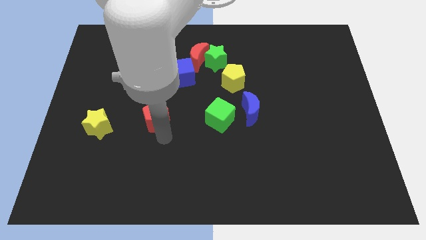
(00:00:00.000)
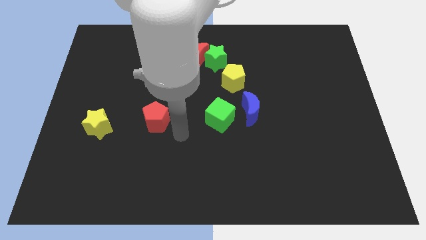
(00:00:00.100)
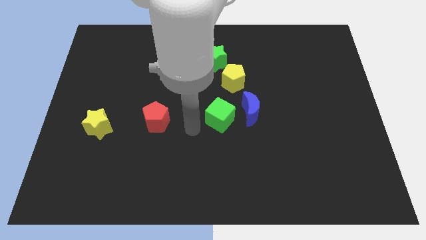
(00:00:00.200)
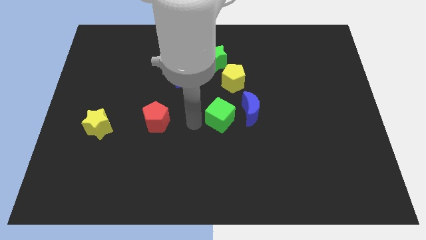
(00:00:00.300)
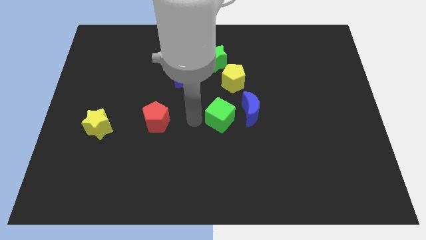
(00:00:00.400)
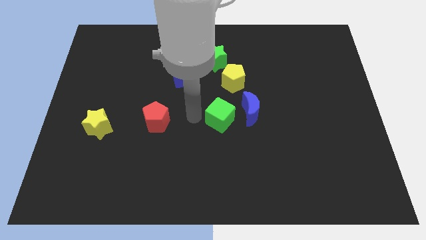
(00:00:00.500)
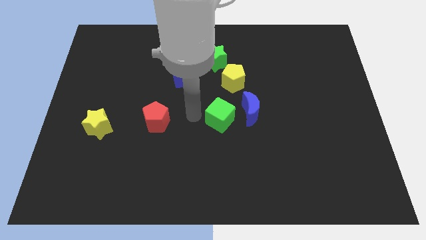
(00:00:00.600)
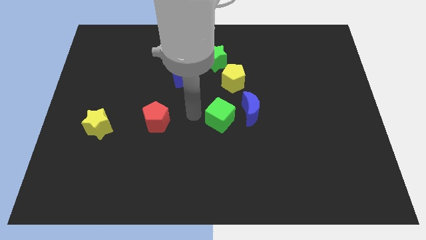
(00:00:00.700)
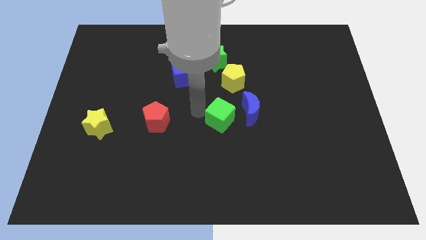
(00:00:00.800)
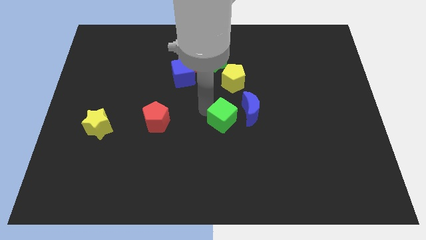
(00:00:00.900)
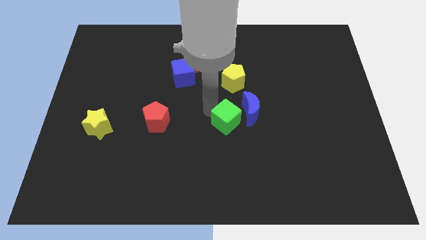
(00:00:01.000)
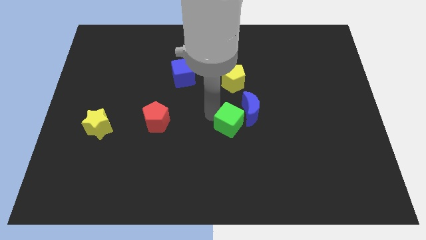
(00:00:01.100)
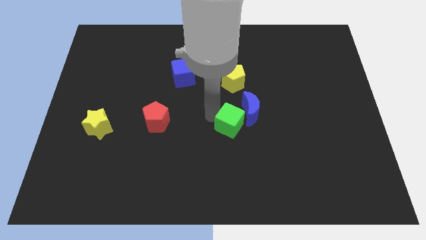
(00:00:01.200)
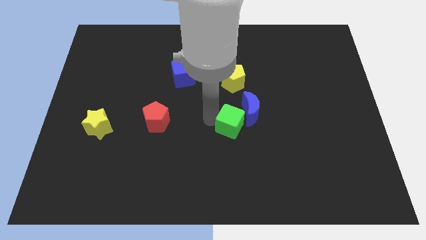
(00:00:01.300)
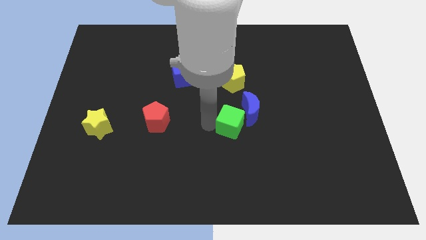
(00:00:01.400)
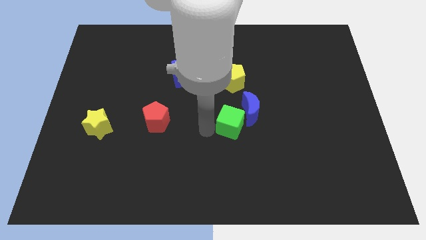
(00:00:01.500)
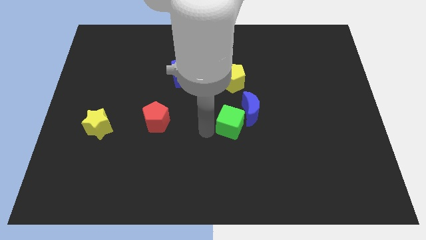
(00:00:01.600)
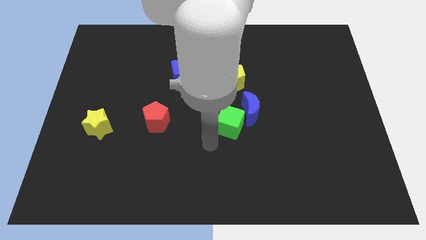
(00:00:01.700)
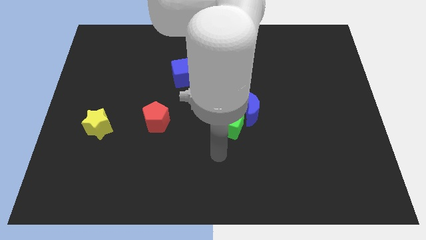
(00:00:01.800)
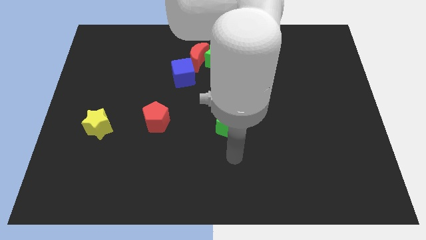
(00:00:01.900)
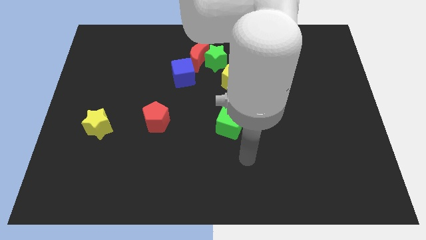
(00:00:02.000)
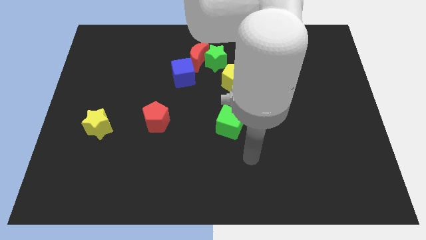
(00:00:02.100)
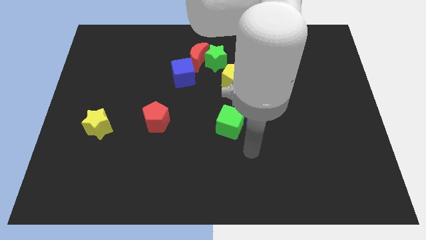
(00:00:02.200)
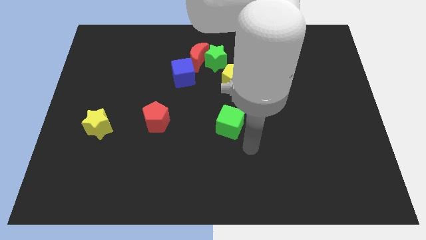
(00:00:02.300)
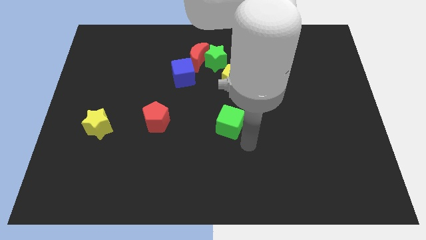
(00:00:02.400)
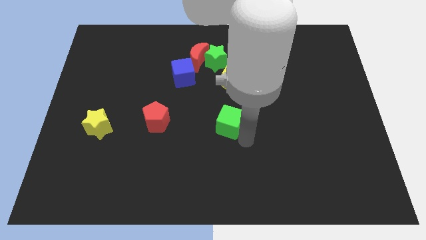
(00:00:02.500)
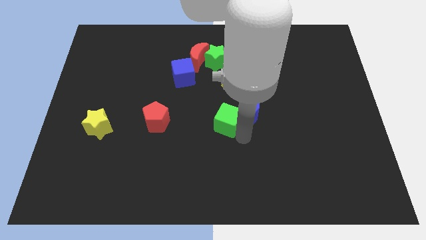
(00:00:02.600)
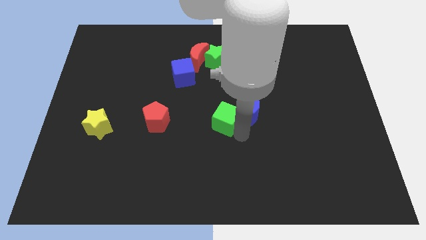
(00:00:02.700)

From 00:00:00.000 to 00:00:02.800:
move green cube into blue crescent

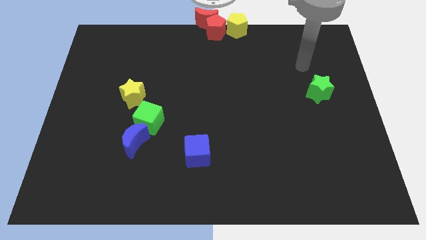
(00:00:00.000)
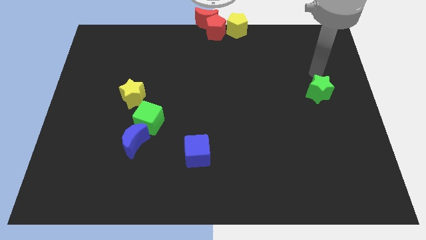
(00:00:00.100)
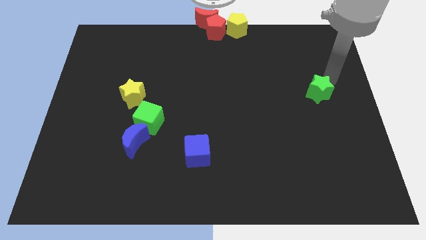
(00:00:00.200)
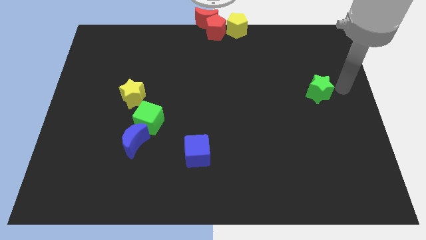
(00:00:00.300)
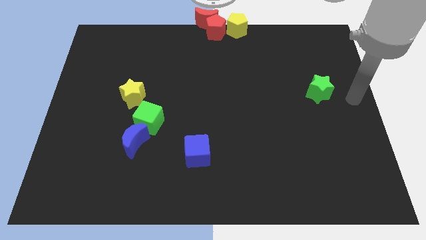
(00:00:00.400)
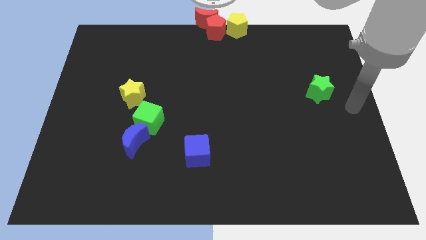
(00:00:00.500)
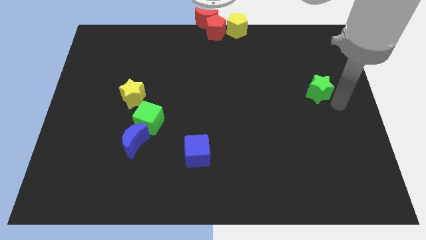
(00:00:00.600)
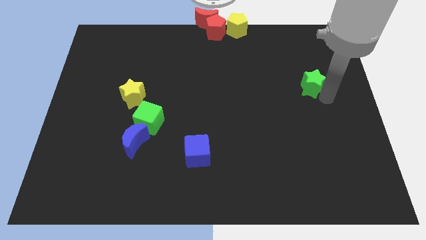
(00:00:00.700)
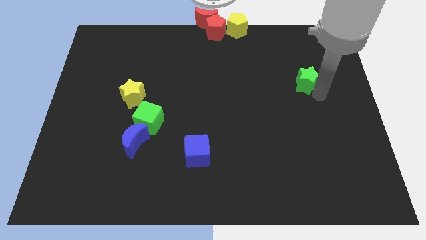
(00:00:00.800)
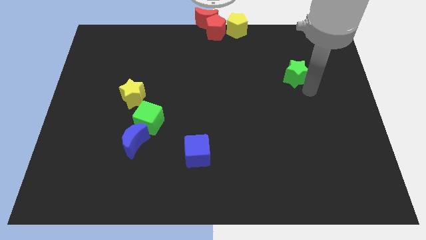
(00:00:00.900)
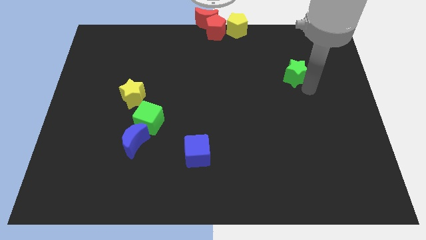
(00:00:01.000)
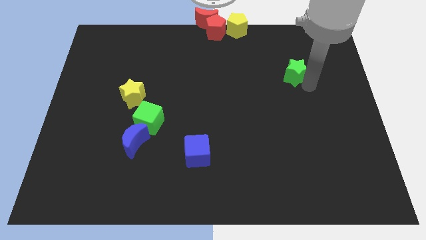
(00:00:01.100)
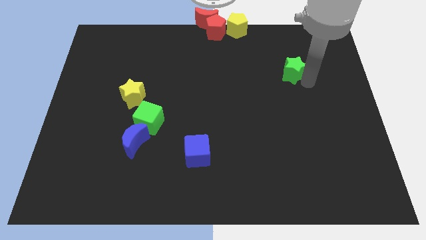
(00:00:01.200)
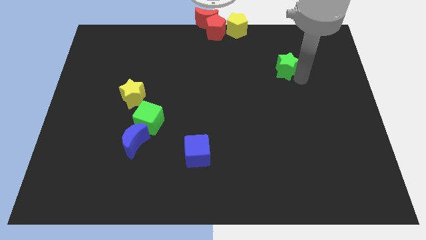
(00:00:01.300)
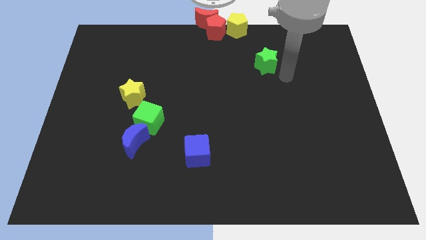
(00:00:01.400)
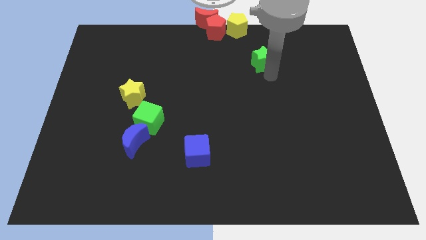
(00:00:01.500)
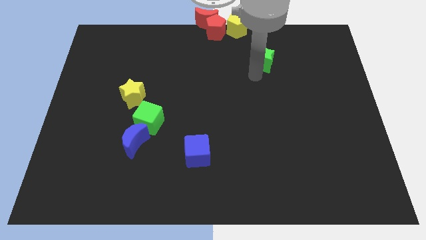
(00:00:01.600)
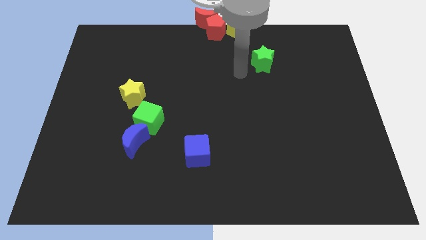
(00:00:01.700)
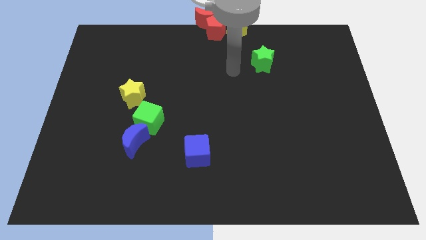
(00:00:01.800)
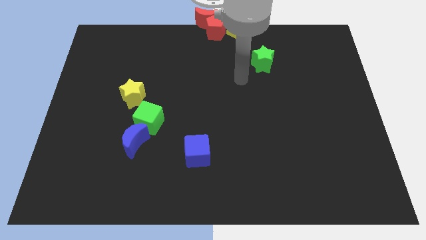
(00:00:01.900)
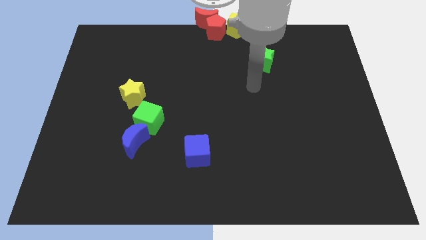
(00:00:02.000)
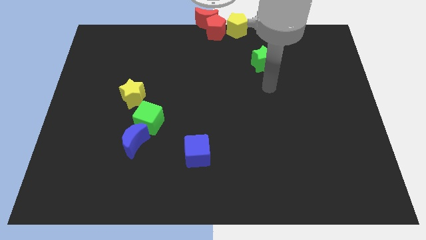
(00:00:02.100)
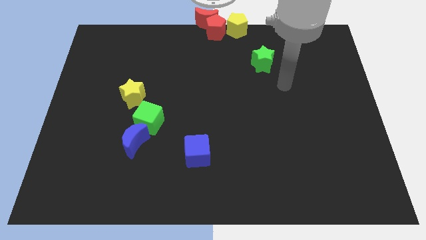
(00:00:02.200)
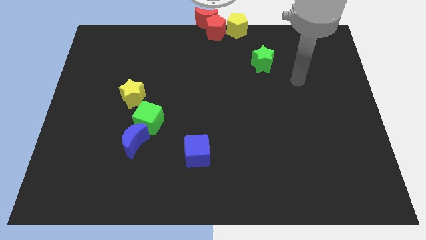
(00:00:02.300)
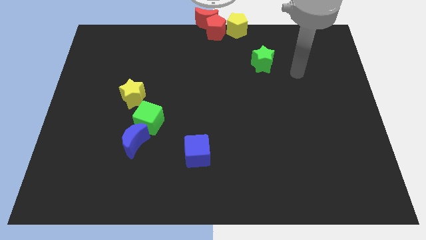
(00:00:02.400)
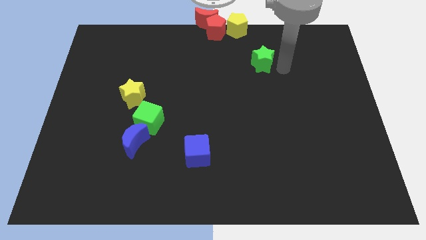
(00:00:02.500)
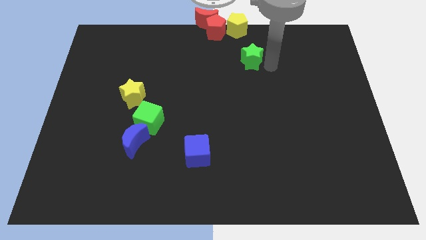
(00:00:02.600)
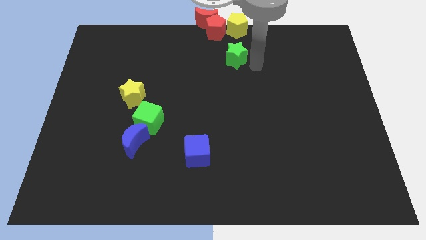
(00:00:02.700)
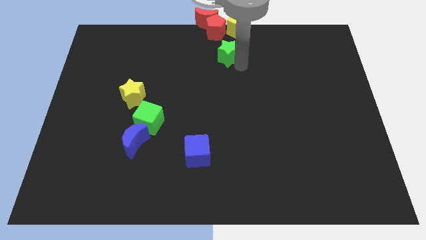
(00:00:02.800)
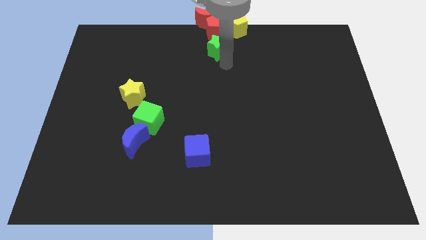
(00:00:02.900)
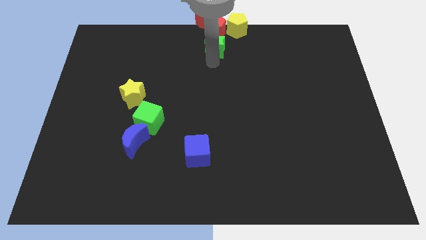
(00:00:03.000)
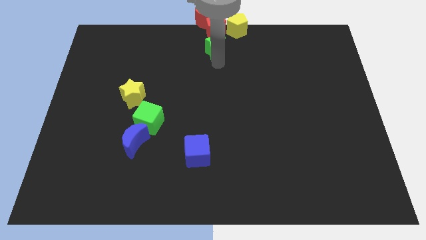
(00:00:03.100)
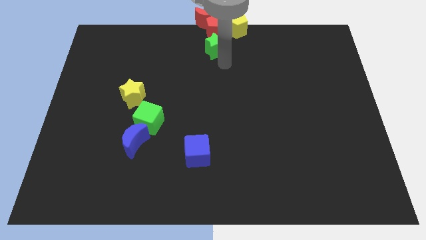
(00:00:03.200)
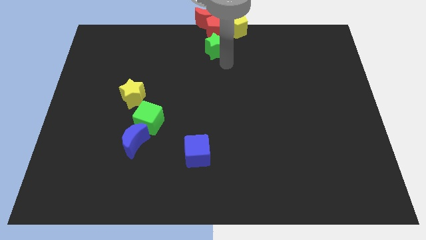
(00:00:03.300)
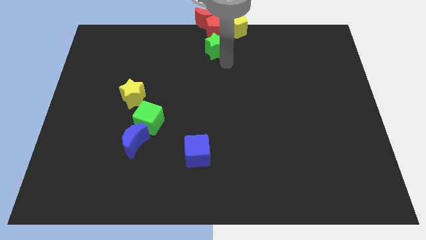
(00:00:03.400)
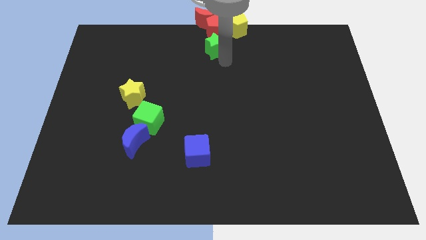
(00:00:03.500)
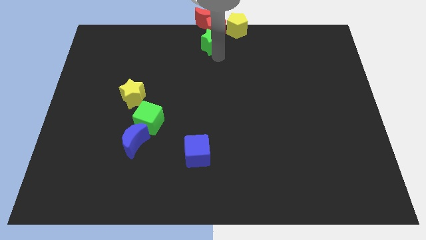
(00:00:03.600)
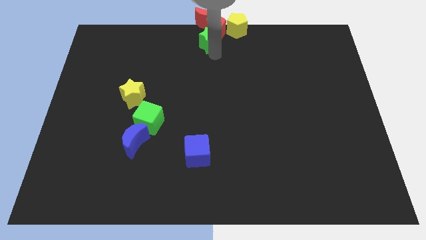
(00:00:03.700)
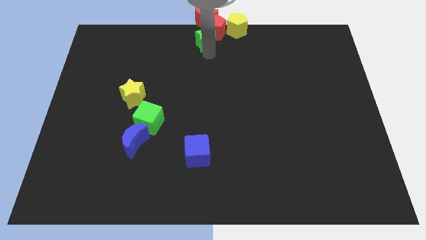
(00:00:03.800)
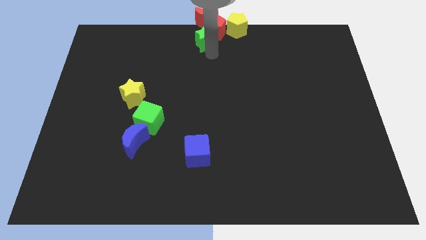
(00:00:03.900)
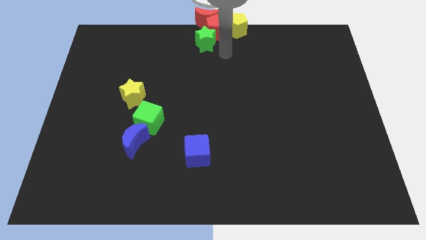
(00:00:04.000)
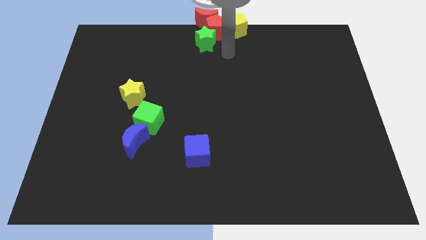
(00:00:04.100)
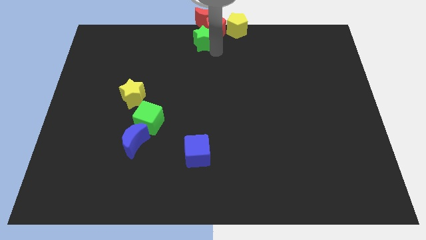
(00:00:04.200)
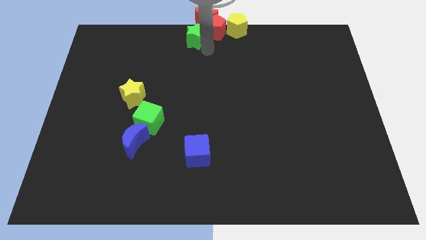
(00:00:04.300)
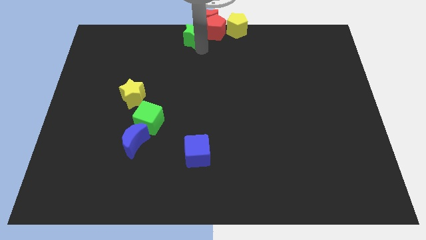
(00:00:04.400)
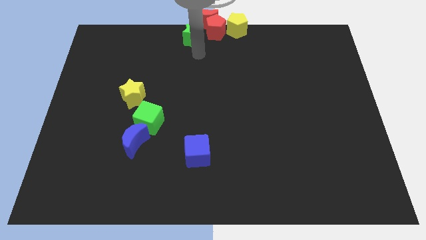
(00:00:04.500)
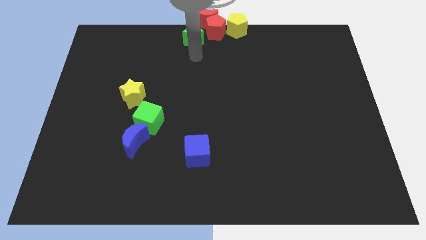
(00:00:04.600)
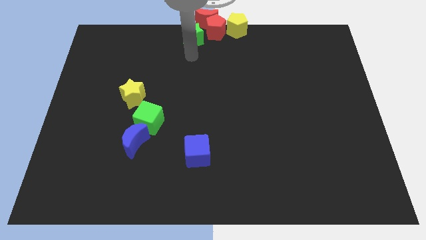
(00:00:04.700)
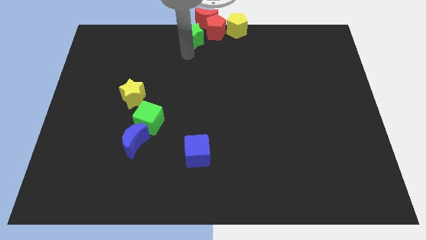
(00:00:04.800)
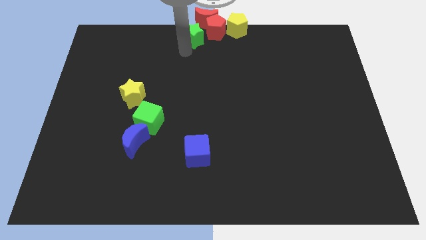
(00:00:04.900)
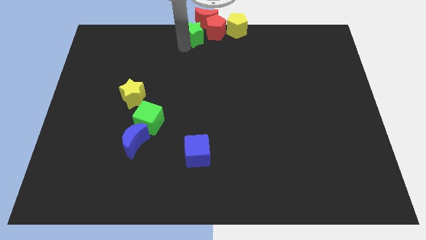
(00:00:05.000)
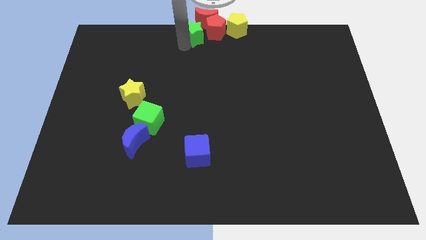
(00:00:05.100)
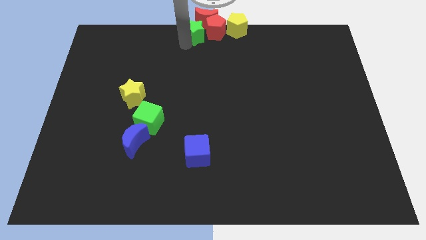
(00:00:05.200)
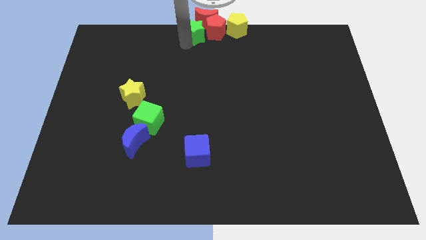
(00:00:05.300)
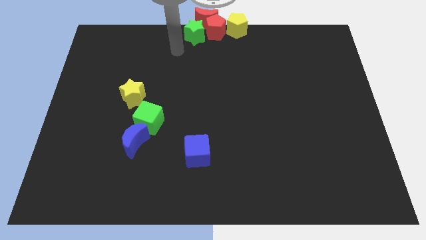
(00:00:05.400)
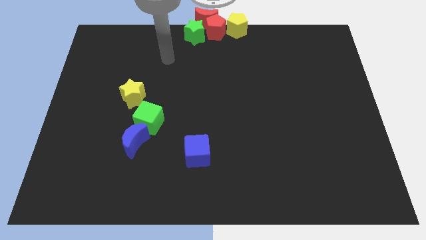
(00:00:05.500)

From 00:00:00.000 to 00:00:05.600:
move the green star to the left side of the red pentagon

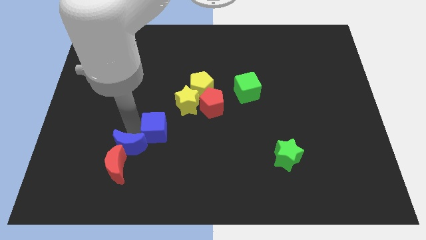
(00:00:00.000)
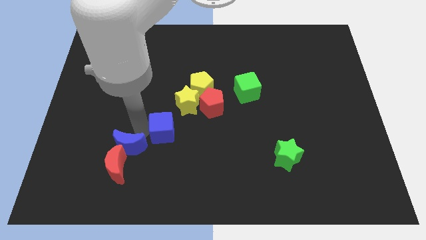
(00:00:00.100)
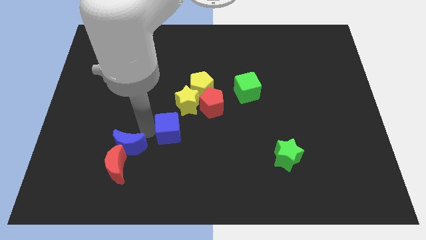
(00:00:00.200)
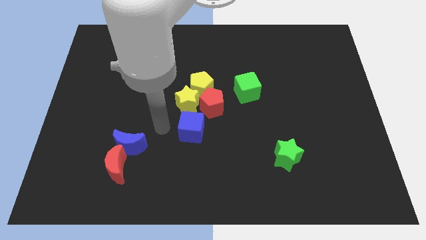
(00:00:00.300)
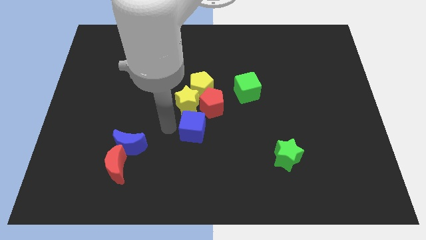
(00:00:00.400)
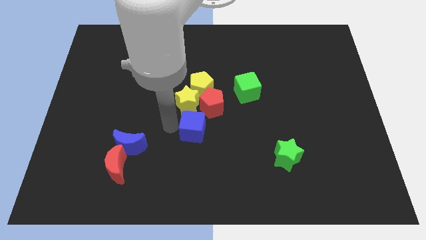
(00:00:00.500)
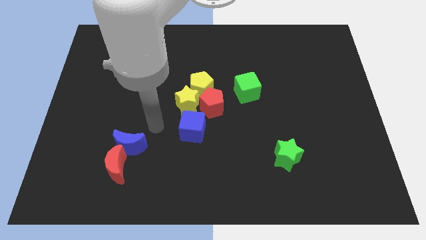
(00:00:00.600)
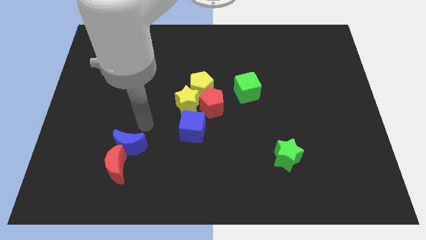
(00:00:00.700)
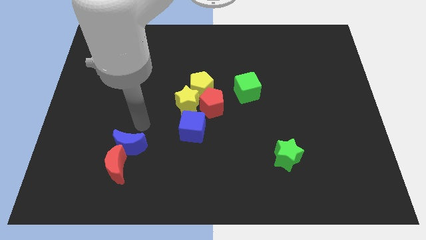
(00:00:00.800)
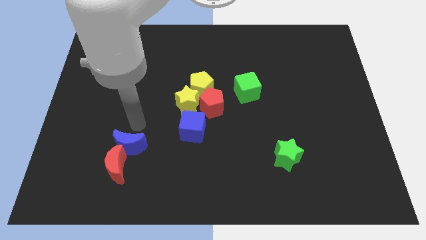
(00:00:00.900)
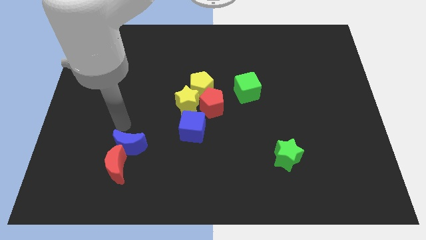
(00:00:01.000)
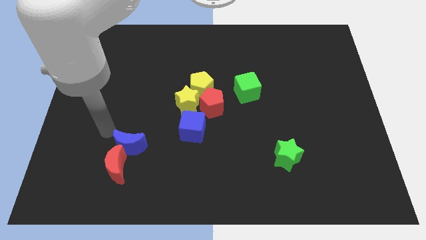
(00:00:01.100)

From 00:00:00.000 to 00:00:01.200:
move the blue cube to the bottom of the yellow star
